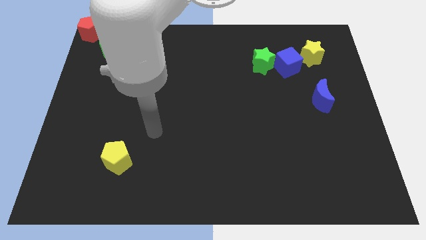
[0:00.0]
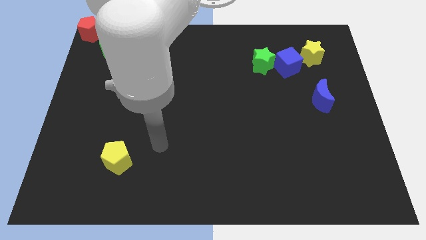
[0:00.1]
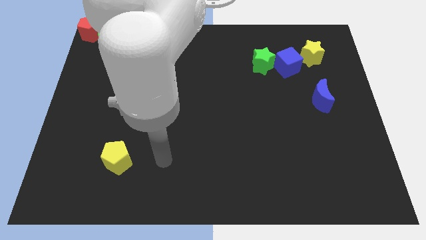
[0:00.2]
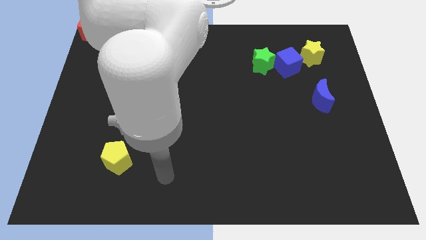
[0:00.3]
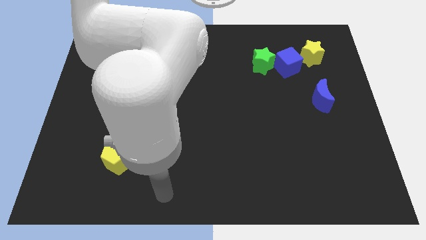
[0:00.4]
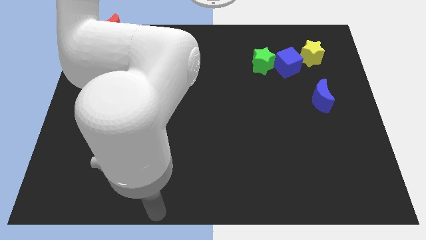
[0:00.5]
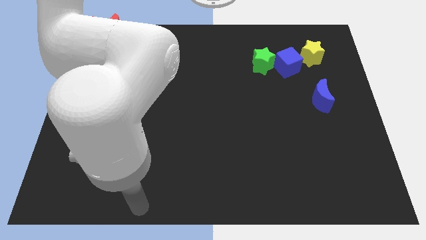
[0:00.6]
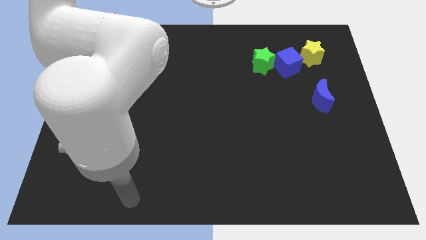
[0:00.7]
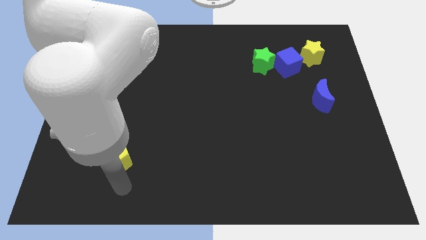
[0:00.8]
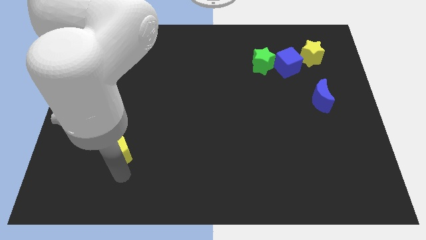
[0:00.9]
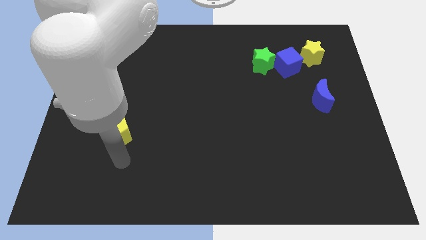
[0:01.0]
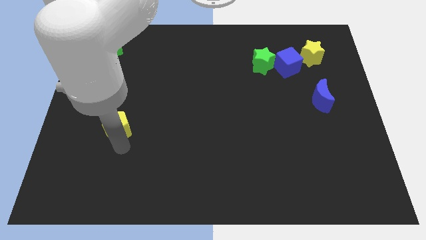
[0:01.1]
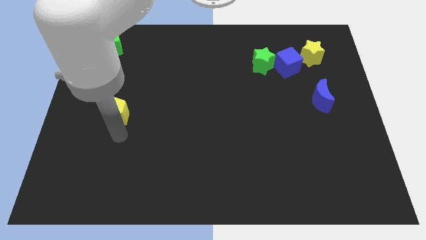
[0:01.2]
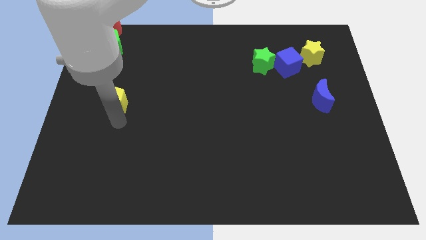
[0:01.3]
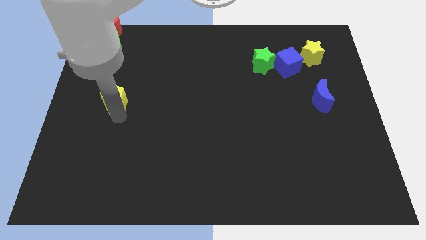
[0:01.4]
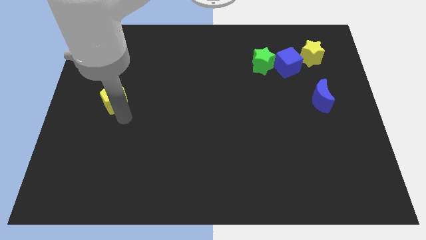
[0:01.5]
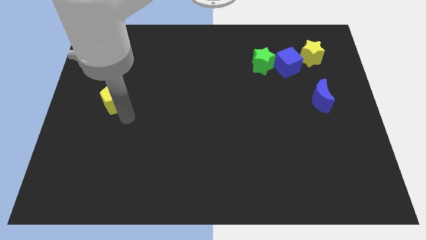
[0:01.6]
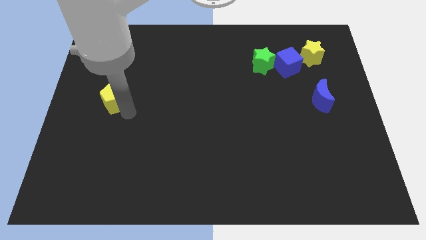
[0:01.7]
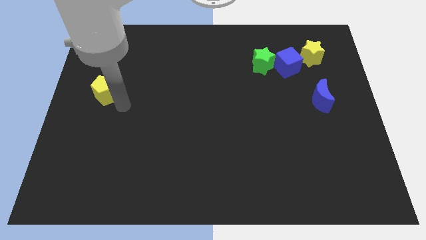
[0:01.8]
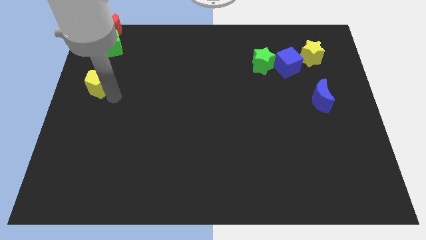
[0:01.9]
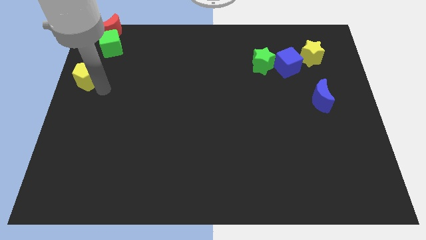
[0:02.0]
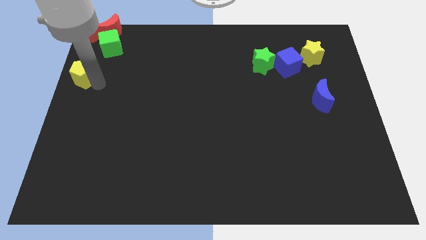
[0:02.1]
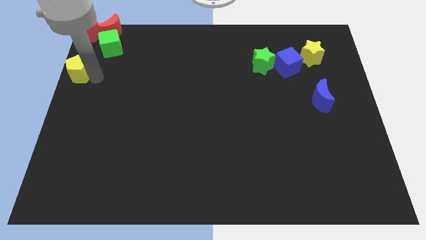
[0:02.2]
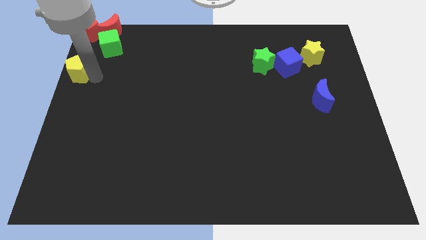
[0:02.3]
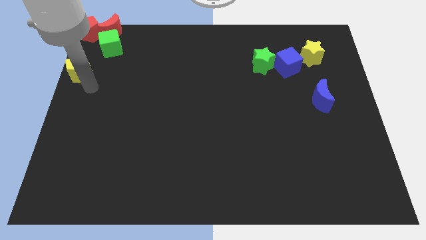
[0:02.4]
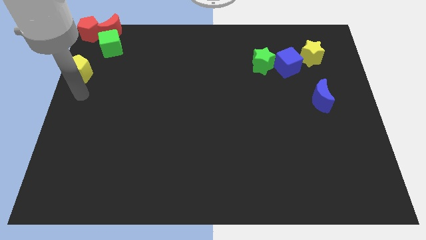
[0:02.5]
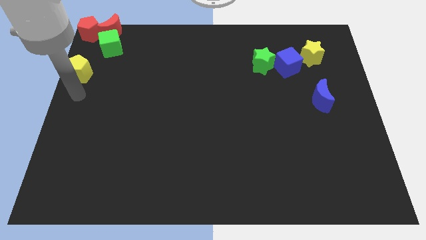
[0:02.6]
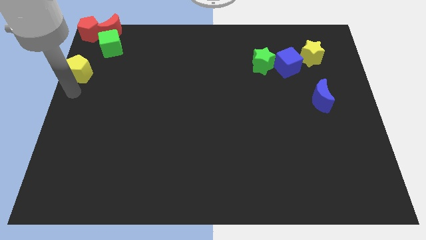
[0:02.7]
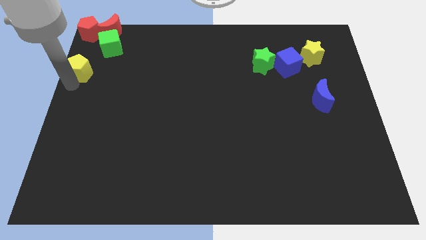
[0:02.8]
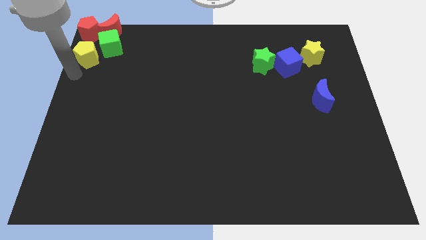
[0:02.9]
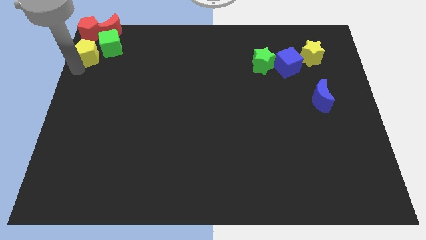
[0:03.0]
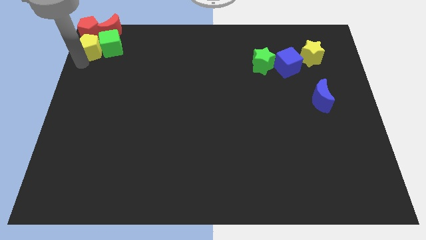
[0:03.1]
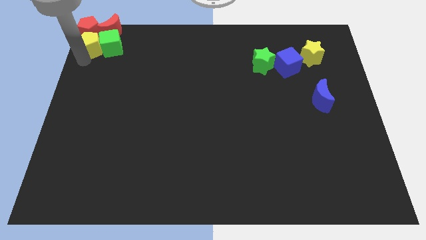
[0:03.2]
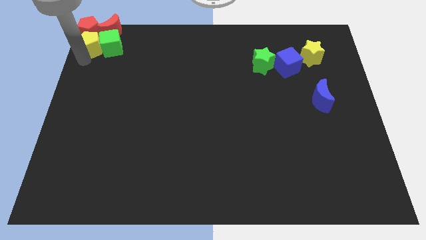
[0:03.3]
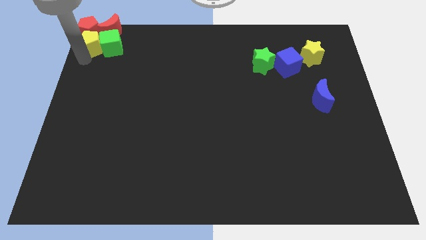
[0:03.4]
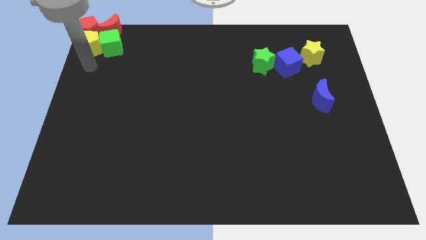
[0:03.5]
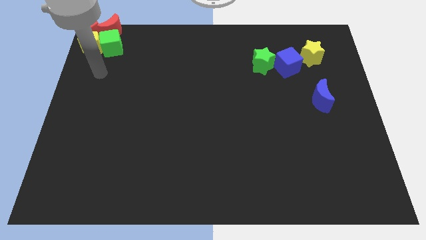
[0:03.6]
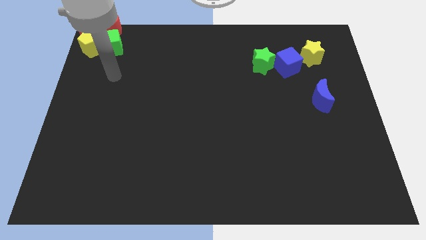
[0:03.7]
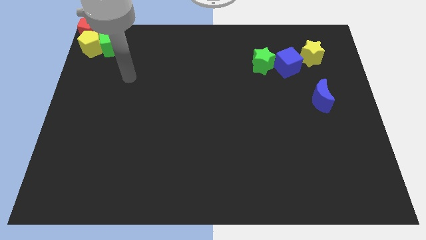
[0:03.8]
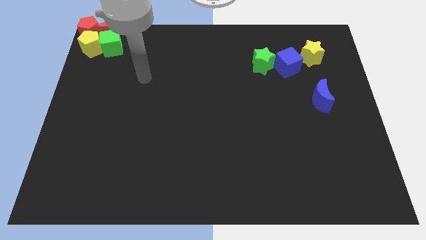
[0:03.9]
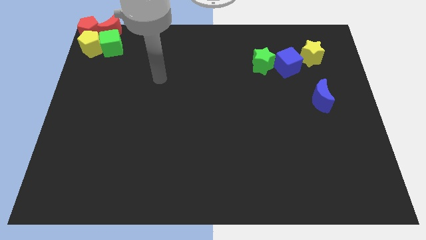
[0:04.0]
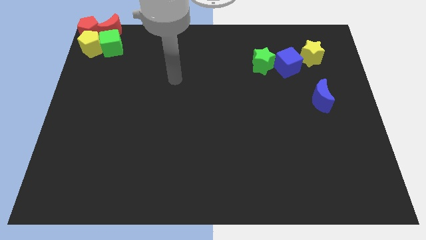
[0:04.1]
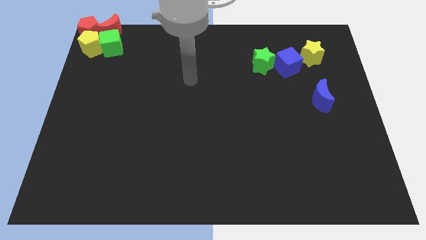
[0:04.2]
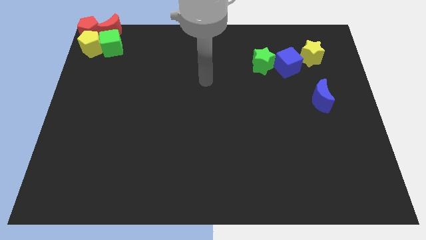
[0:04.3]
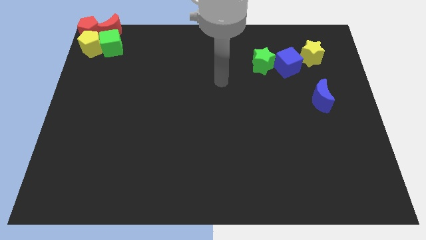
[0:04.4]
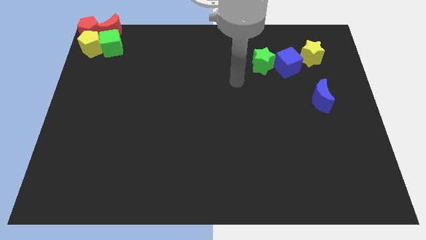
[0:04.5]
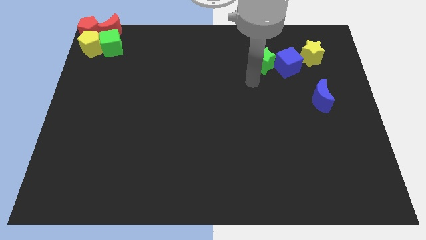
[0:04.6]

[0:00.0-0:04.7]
push the yellow pentagon into the red pentagon

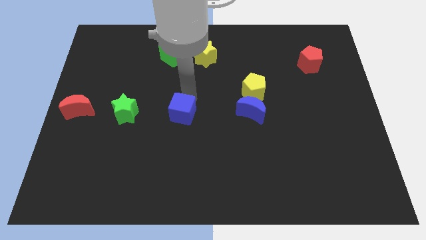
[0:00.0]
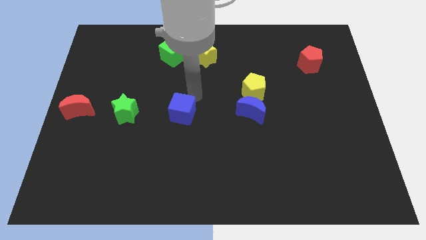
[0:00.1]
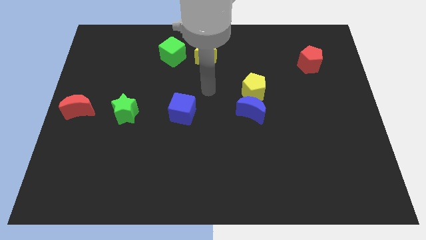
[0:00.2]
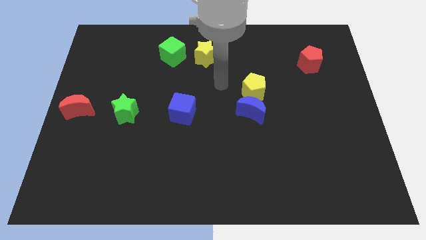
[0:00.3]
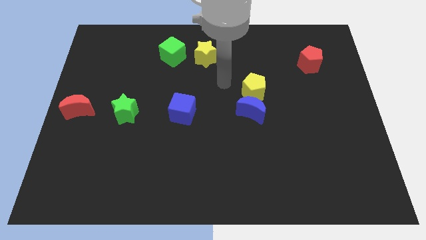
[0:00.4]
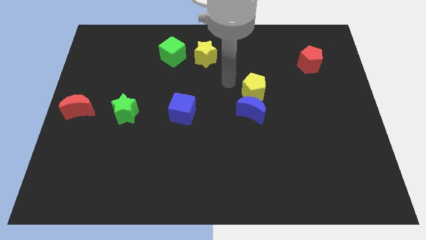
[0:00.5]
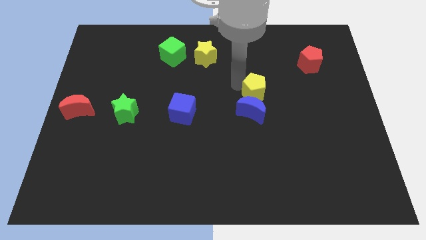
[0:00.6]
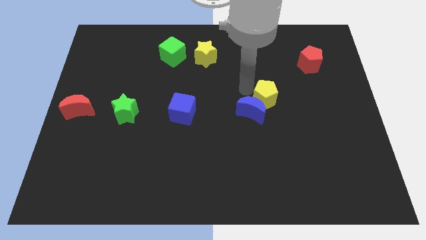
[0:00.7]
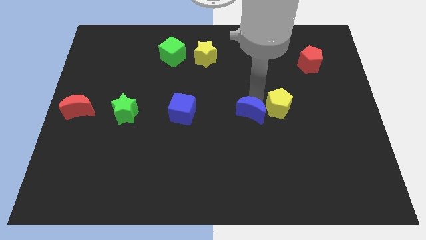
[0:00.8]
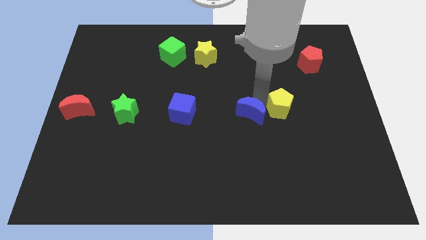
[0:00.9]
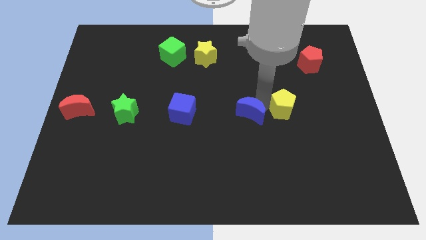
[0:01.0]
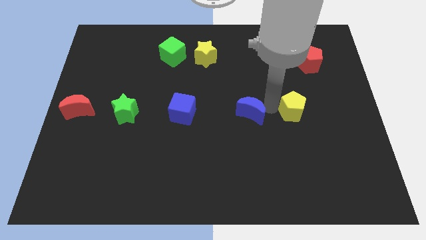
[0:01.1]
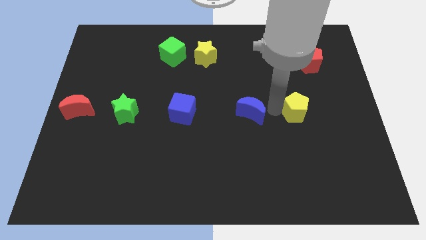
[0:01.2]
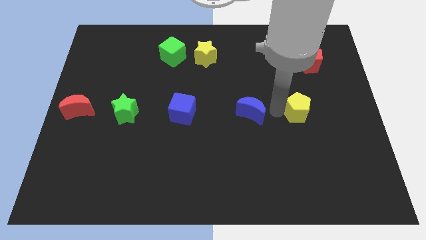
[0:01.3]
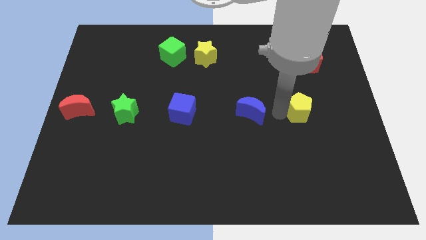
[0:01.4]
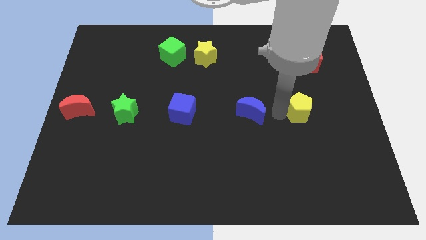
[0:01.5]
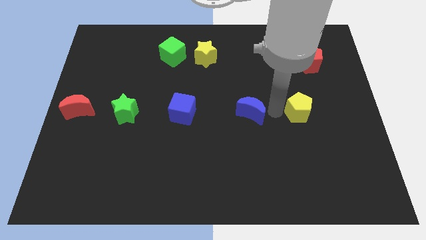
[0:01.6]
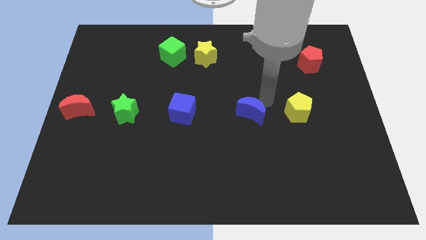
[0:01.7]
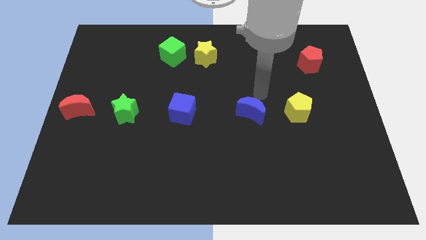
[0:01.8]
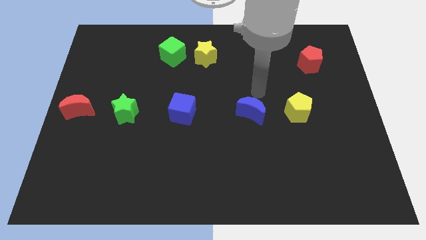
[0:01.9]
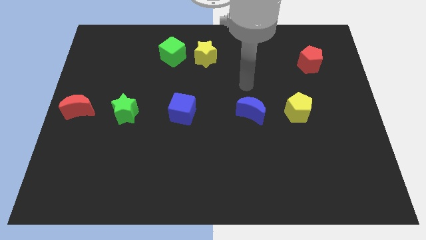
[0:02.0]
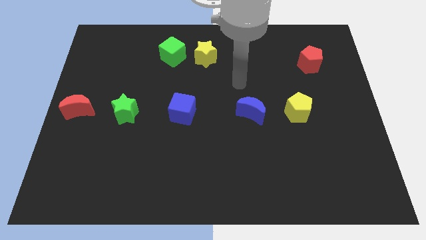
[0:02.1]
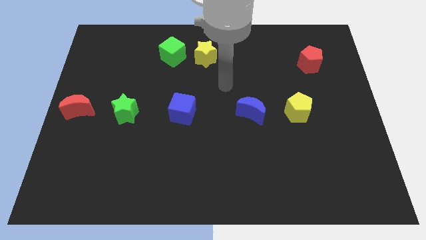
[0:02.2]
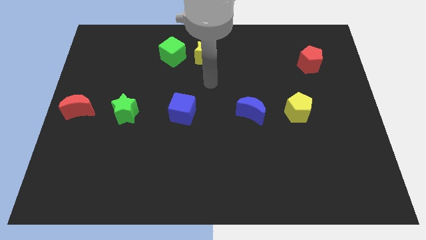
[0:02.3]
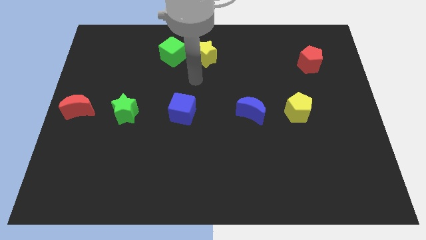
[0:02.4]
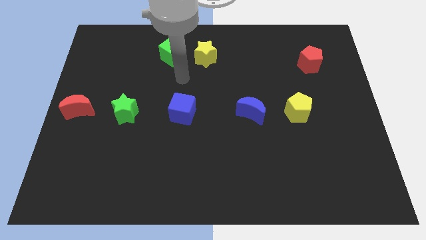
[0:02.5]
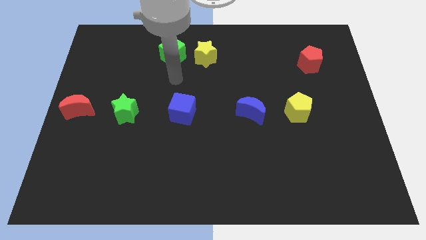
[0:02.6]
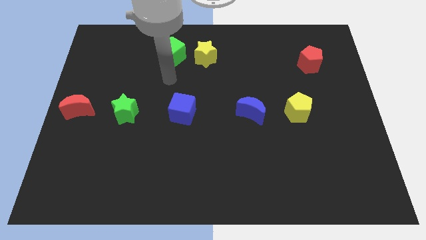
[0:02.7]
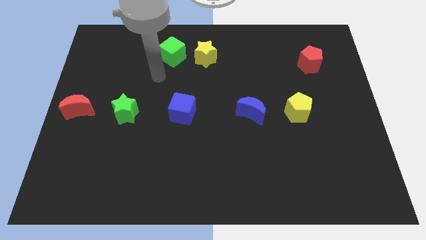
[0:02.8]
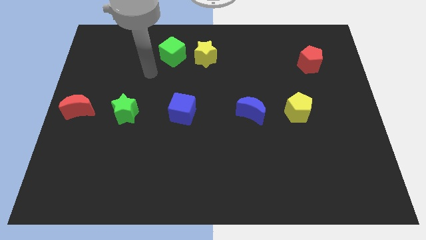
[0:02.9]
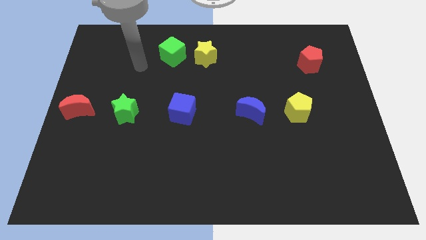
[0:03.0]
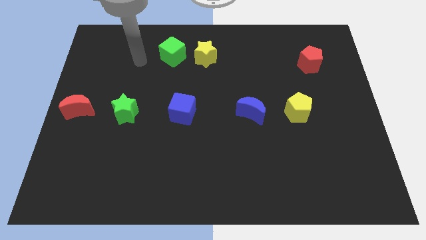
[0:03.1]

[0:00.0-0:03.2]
place the yellow pentagon right to the blue moon

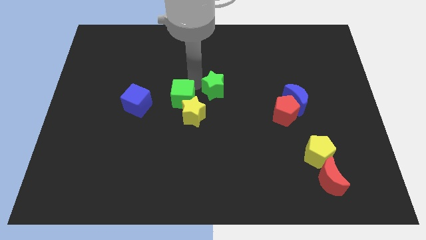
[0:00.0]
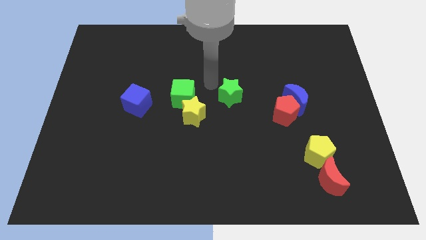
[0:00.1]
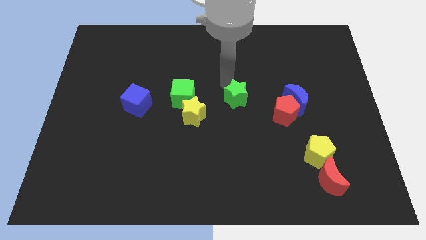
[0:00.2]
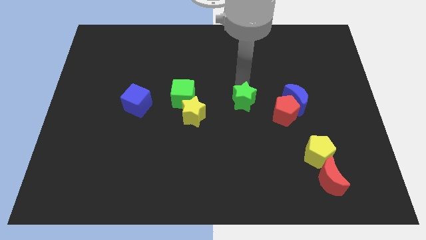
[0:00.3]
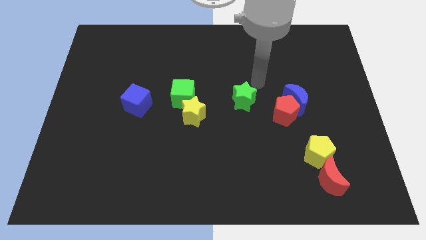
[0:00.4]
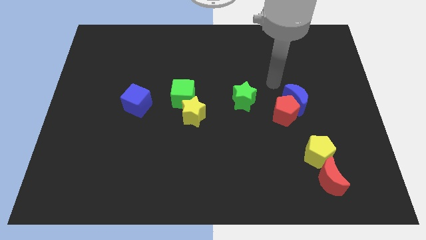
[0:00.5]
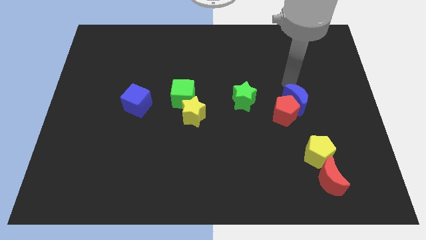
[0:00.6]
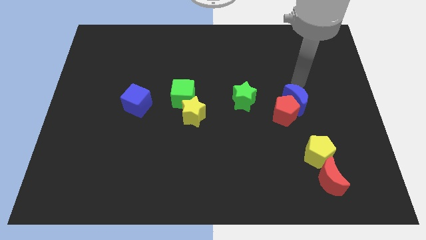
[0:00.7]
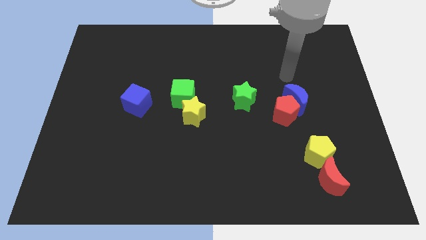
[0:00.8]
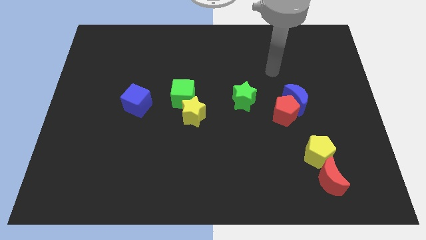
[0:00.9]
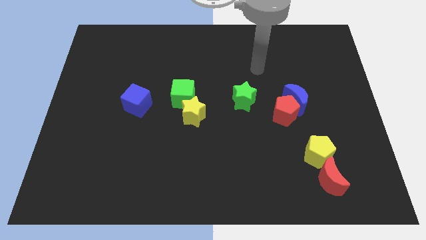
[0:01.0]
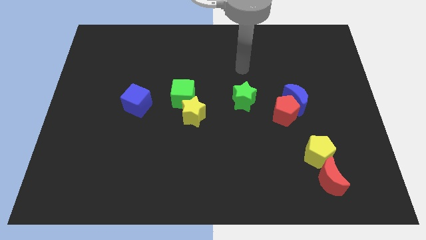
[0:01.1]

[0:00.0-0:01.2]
slightly move the green star towards the right
